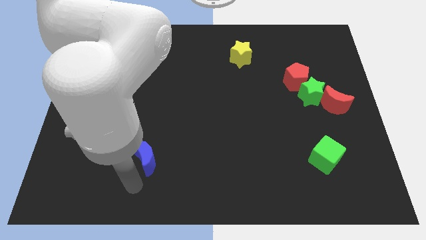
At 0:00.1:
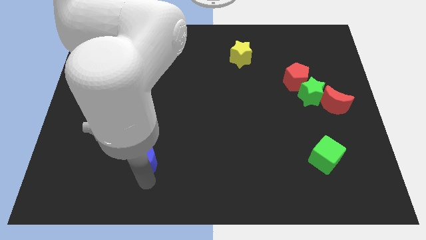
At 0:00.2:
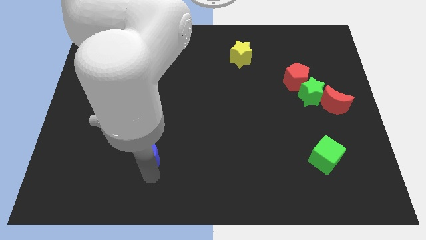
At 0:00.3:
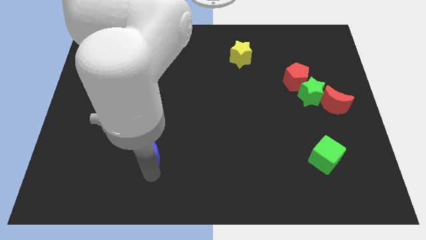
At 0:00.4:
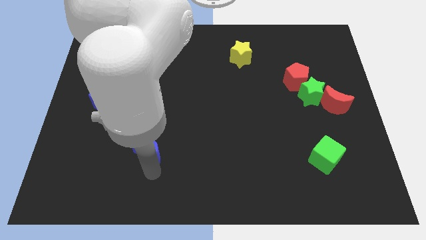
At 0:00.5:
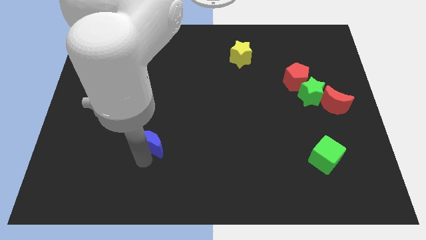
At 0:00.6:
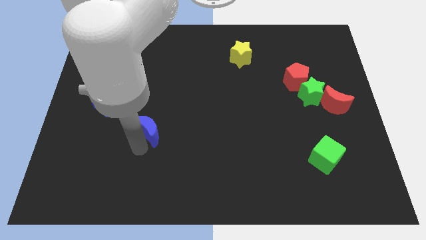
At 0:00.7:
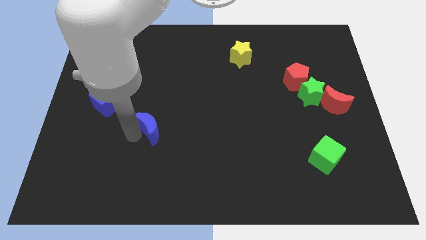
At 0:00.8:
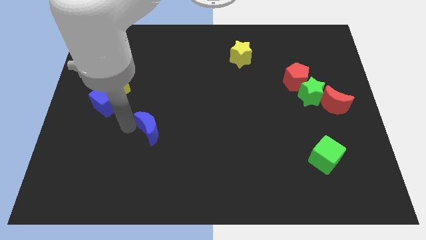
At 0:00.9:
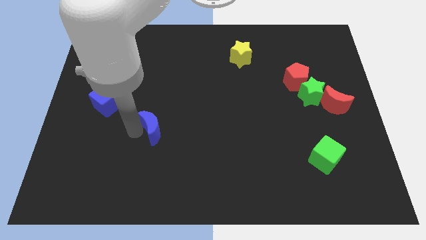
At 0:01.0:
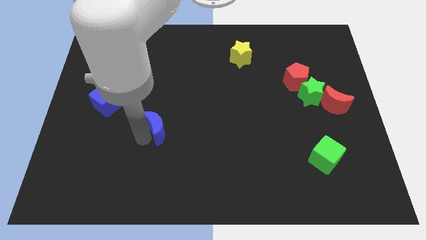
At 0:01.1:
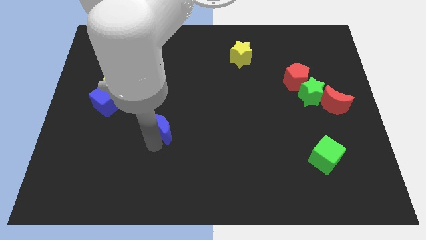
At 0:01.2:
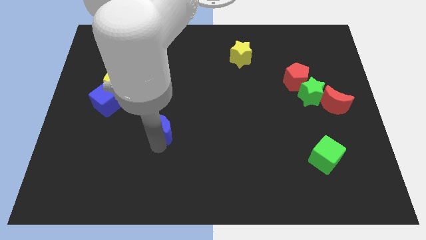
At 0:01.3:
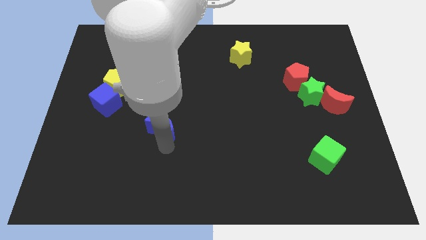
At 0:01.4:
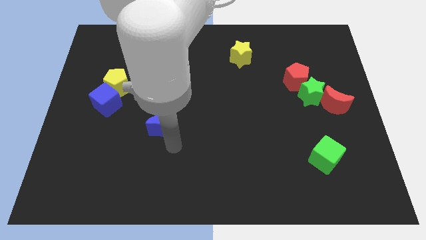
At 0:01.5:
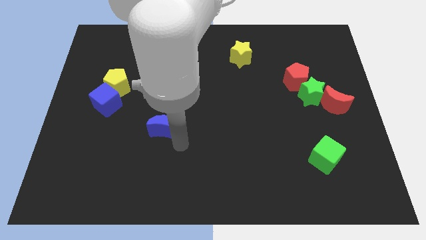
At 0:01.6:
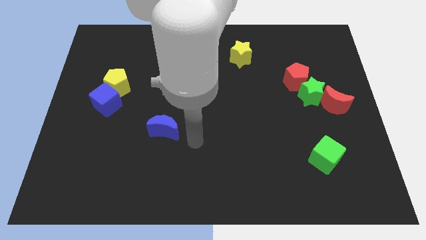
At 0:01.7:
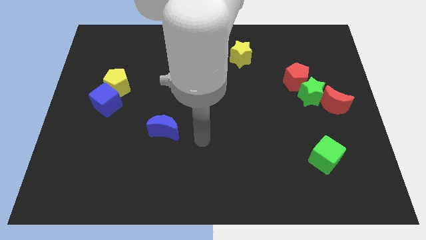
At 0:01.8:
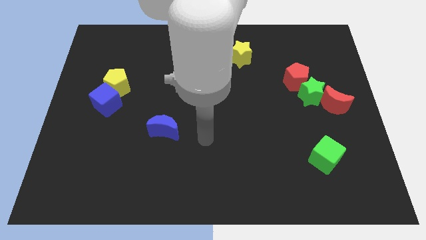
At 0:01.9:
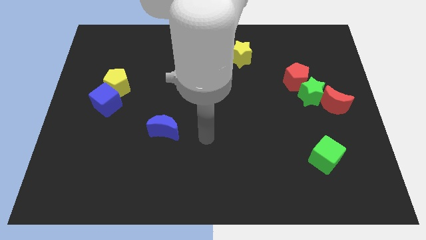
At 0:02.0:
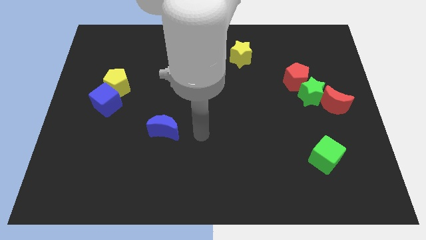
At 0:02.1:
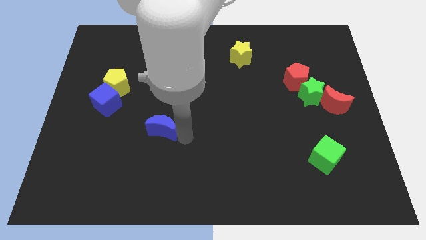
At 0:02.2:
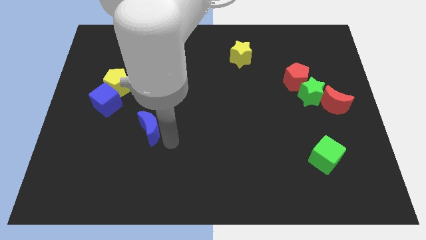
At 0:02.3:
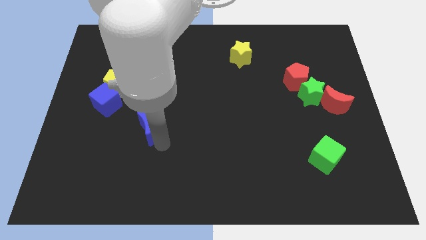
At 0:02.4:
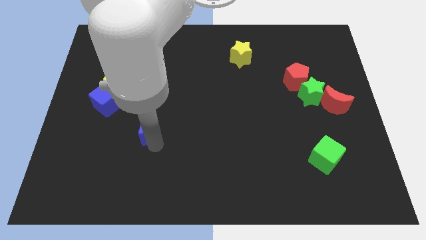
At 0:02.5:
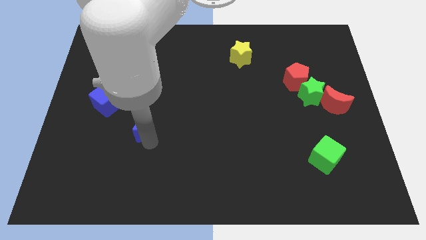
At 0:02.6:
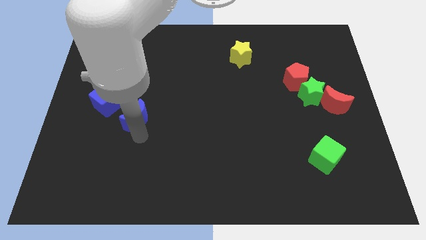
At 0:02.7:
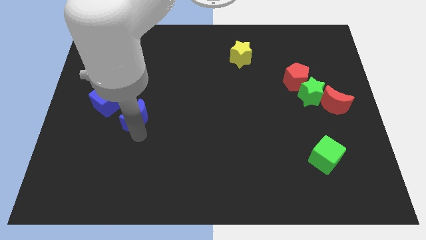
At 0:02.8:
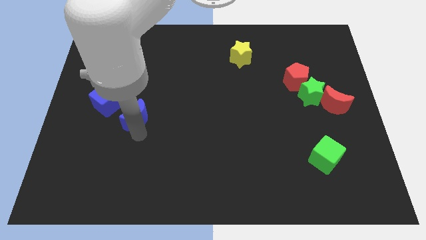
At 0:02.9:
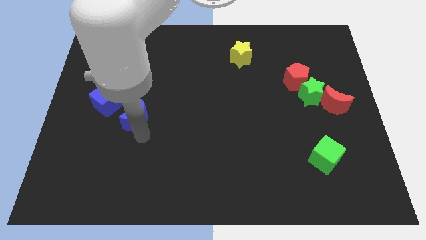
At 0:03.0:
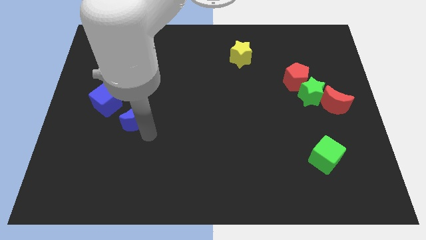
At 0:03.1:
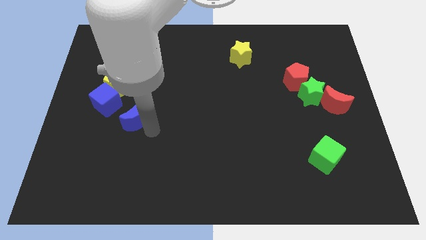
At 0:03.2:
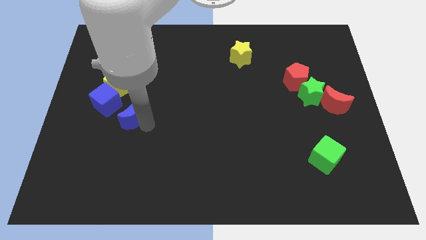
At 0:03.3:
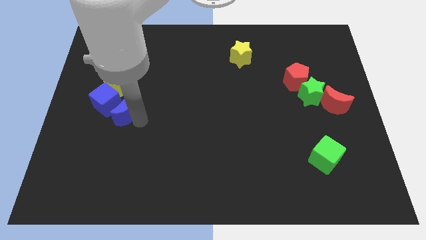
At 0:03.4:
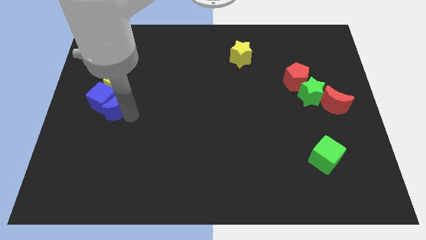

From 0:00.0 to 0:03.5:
push the blue crescent to the bottom right side of the blue cube

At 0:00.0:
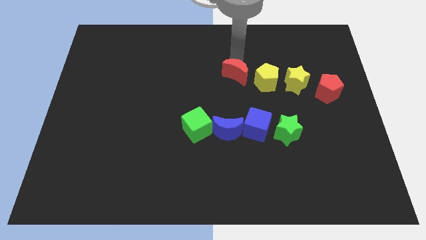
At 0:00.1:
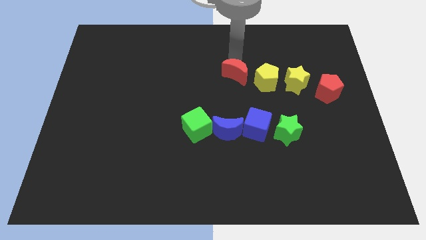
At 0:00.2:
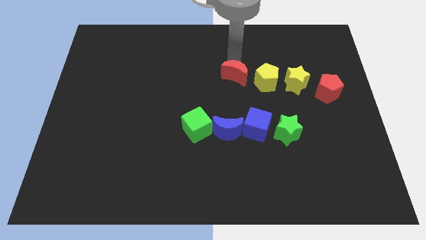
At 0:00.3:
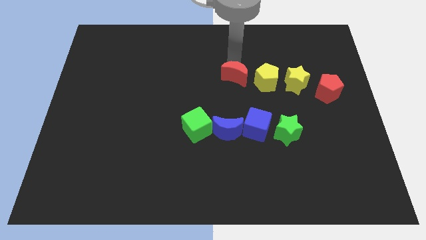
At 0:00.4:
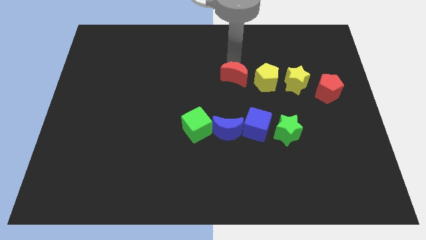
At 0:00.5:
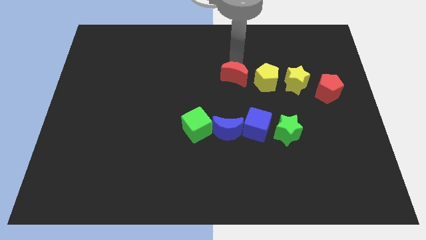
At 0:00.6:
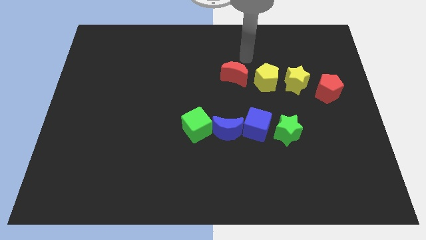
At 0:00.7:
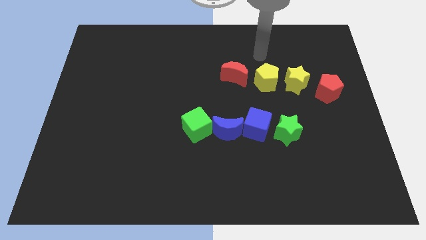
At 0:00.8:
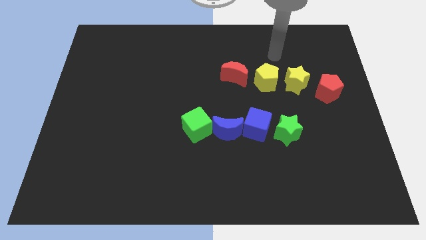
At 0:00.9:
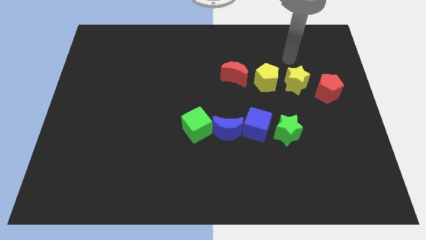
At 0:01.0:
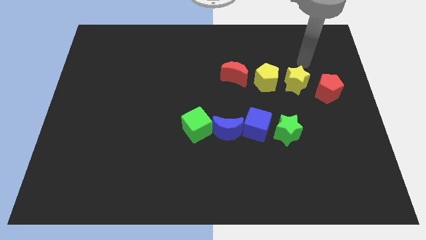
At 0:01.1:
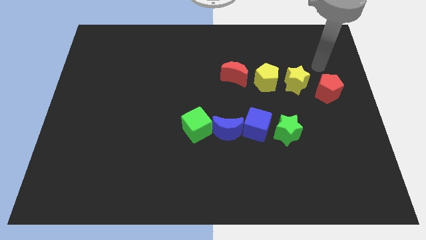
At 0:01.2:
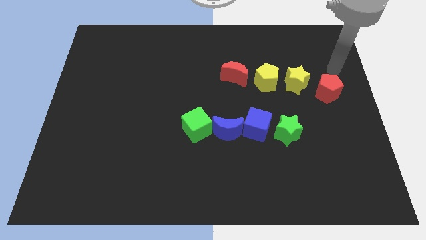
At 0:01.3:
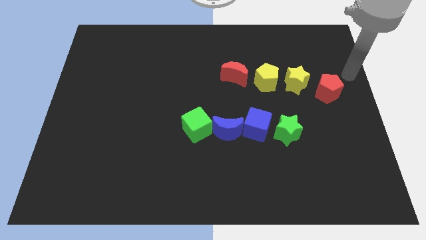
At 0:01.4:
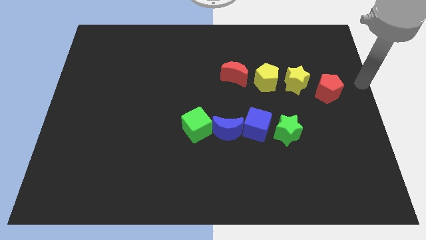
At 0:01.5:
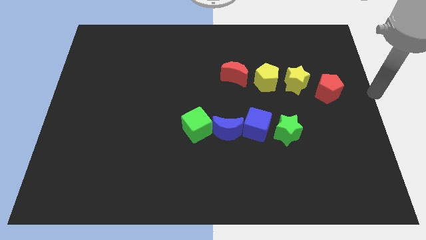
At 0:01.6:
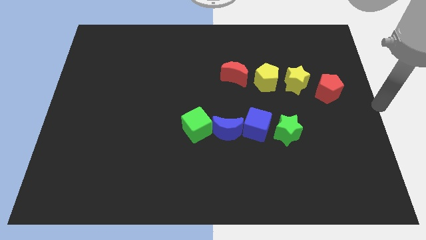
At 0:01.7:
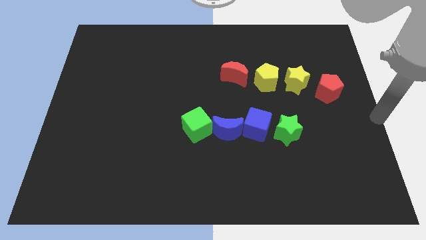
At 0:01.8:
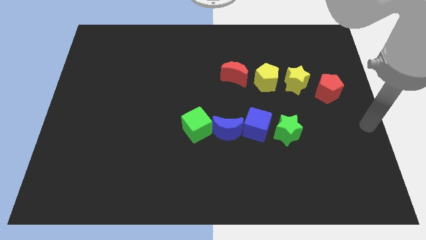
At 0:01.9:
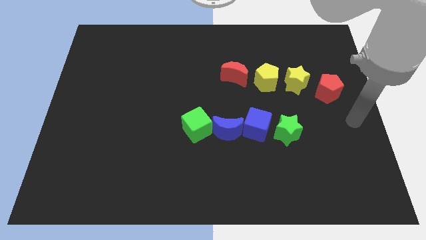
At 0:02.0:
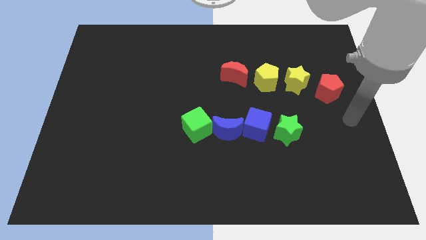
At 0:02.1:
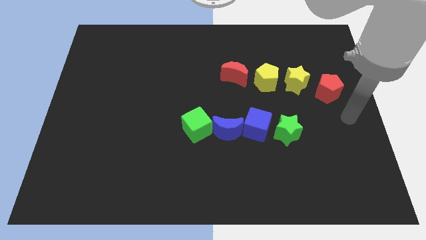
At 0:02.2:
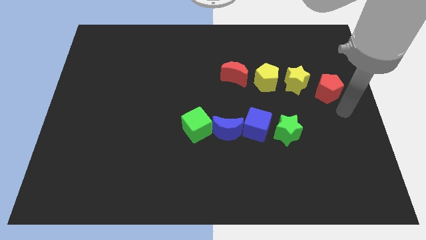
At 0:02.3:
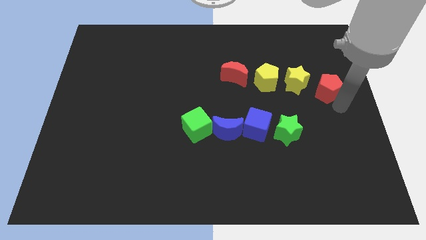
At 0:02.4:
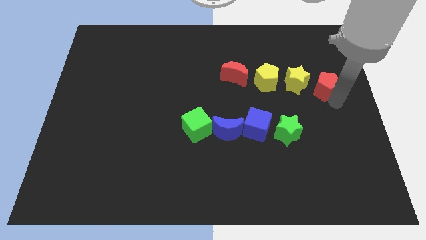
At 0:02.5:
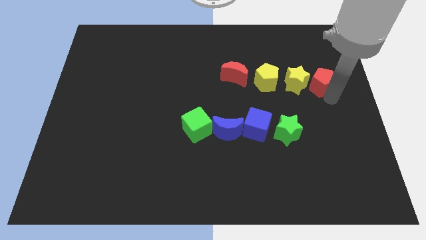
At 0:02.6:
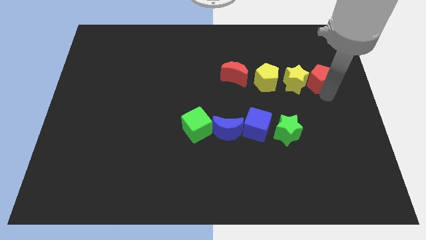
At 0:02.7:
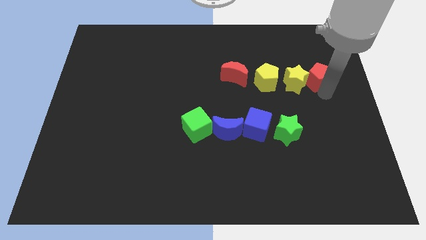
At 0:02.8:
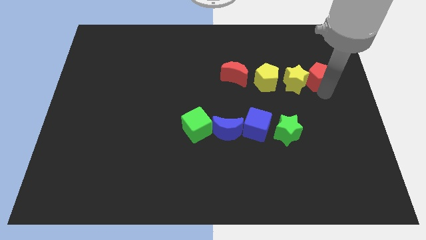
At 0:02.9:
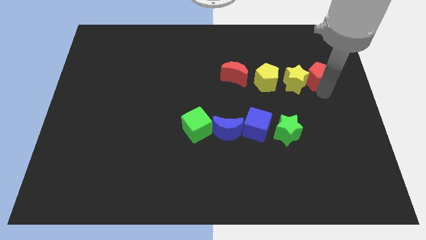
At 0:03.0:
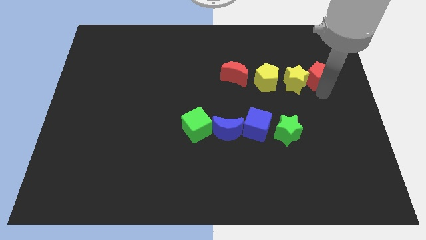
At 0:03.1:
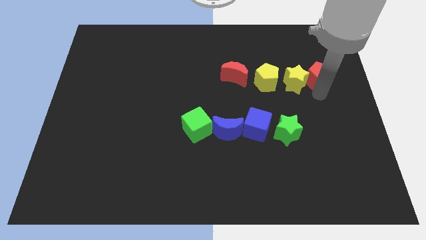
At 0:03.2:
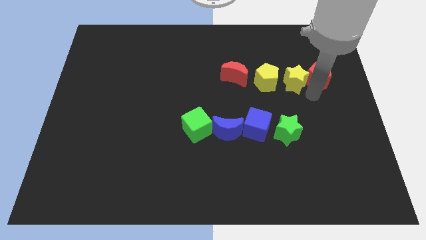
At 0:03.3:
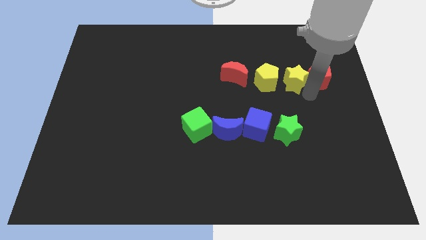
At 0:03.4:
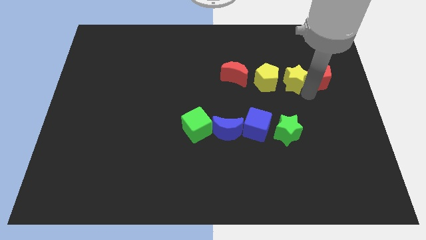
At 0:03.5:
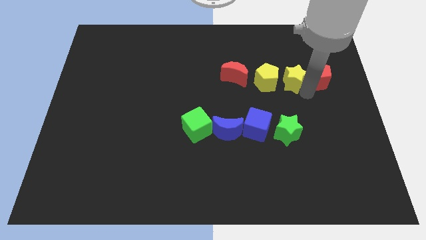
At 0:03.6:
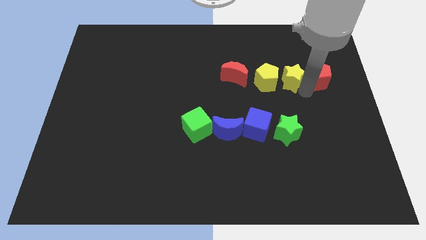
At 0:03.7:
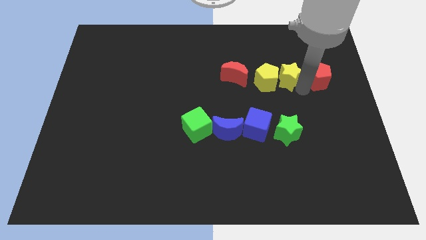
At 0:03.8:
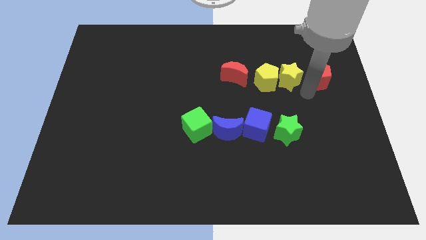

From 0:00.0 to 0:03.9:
move your arm to the bottom left of the red pentagon

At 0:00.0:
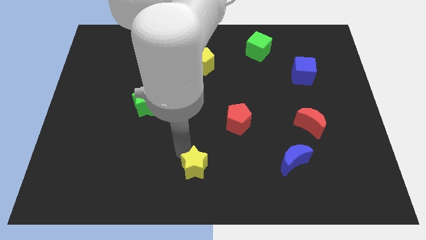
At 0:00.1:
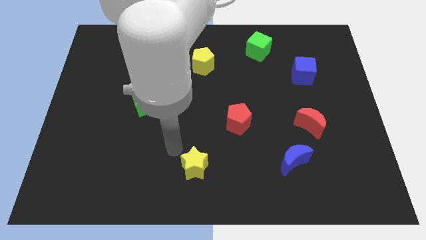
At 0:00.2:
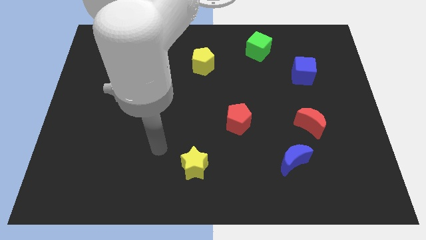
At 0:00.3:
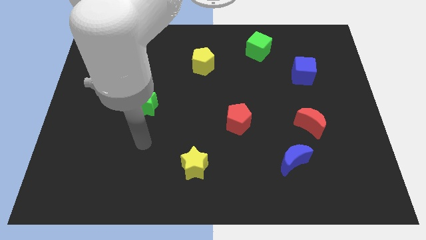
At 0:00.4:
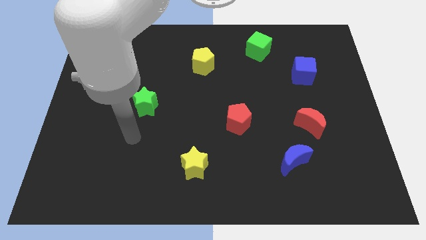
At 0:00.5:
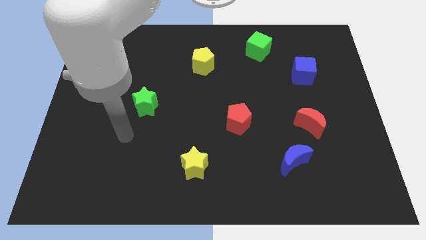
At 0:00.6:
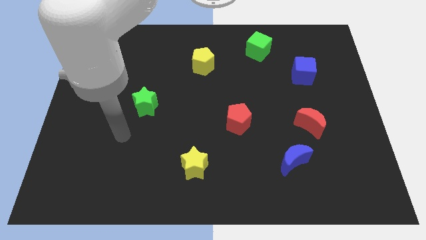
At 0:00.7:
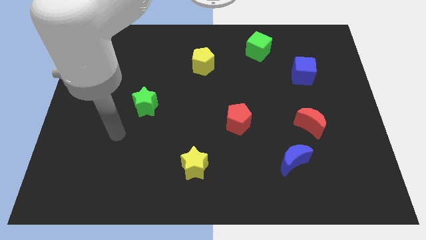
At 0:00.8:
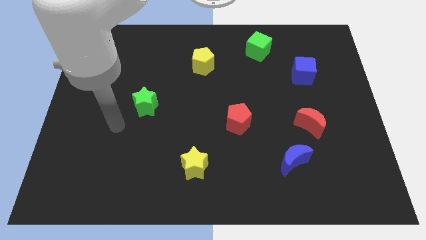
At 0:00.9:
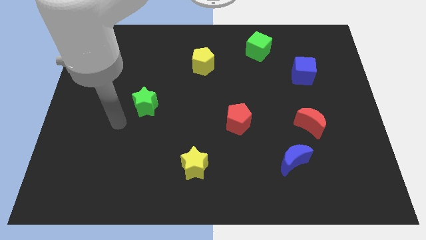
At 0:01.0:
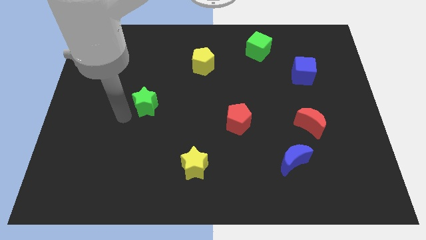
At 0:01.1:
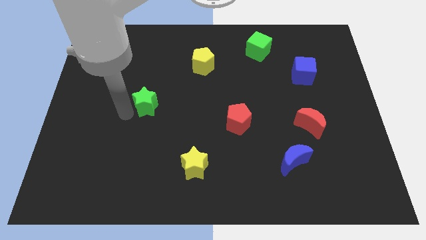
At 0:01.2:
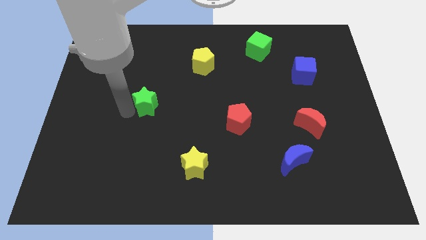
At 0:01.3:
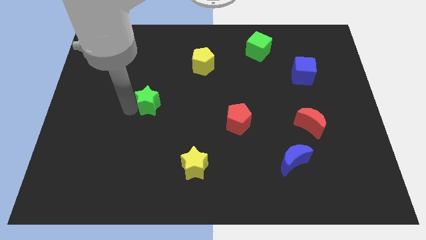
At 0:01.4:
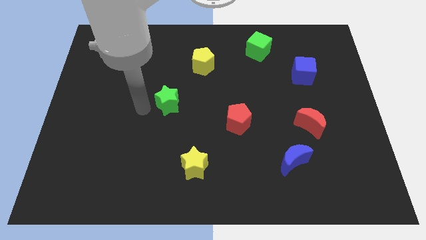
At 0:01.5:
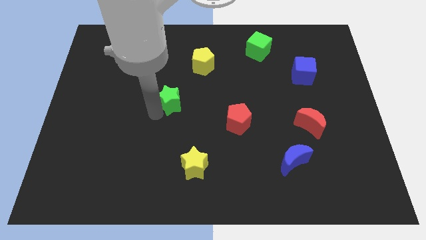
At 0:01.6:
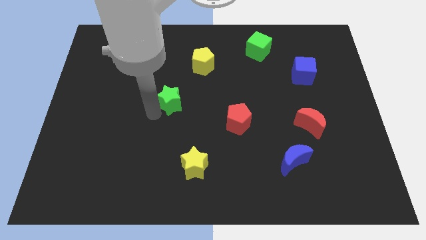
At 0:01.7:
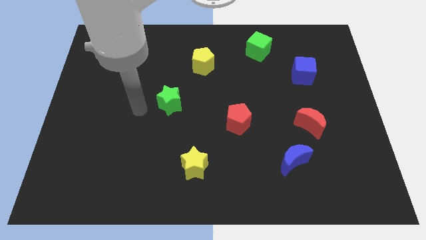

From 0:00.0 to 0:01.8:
move away from the yellow star
